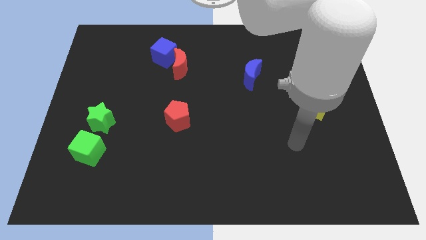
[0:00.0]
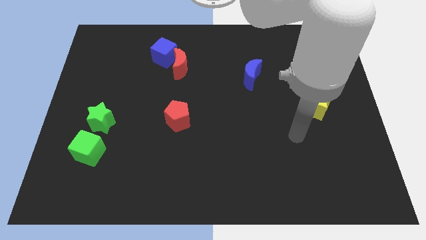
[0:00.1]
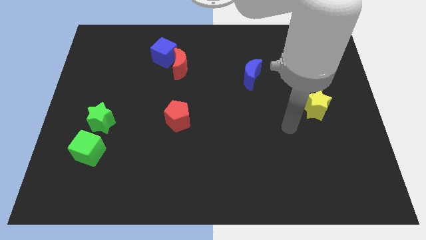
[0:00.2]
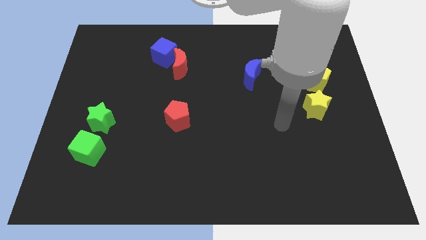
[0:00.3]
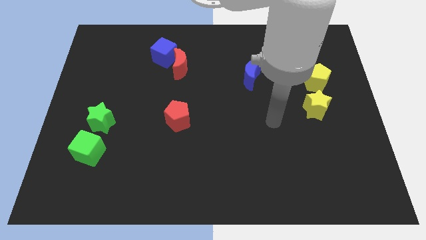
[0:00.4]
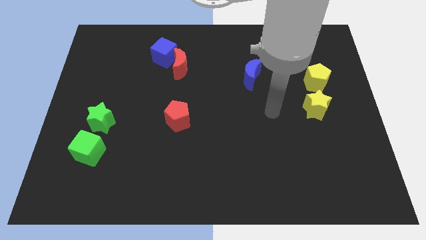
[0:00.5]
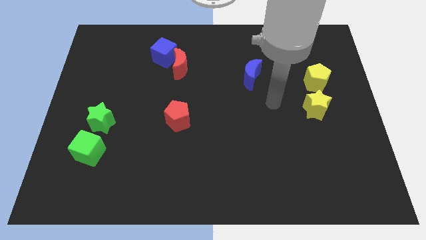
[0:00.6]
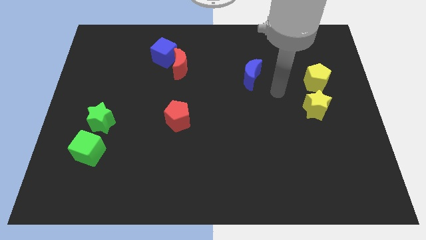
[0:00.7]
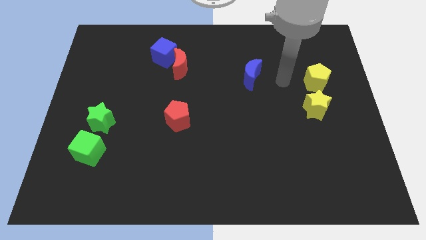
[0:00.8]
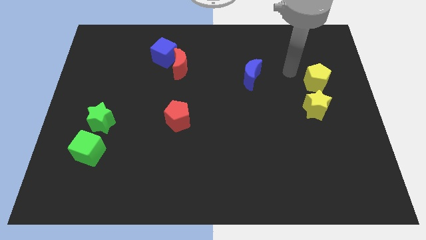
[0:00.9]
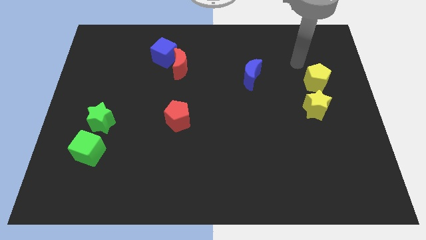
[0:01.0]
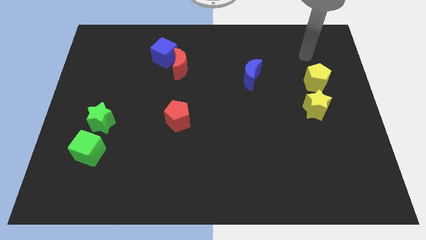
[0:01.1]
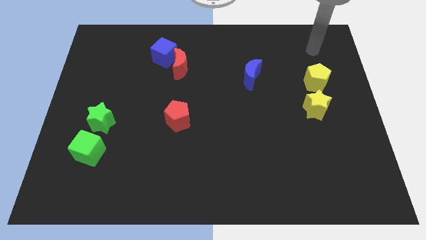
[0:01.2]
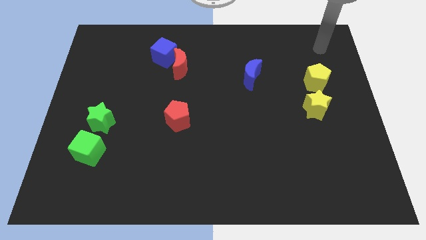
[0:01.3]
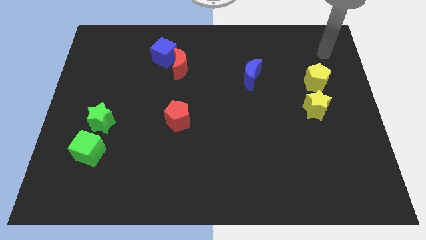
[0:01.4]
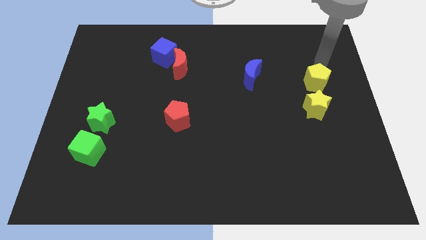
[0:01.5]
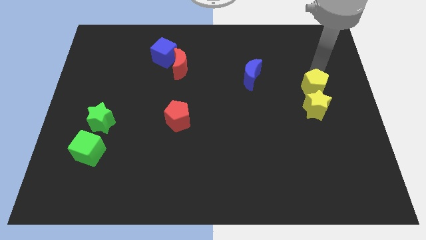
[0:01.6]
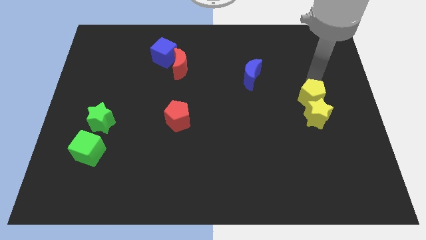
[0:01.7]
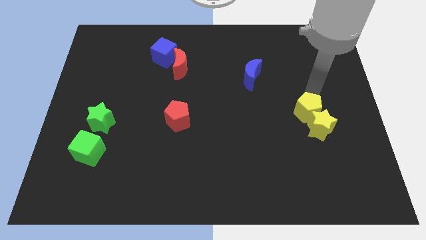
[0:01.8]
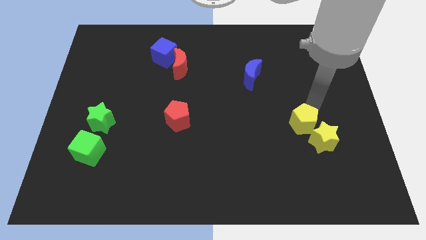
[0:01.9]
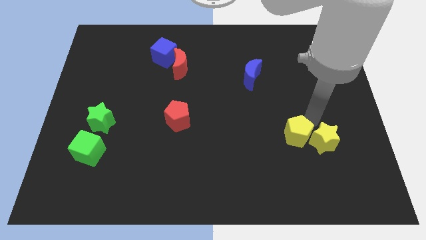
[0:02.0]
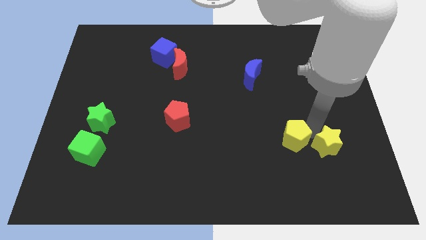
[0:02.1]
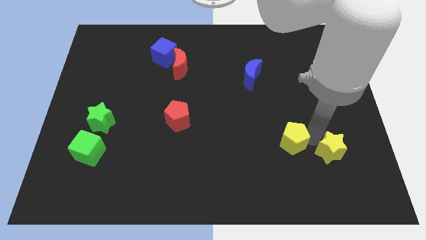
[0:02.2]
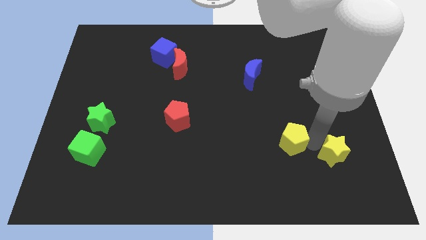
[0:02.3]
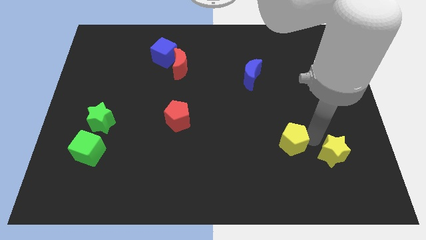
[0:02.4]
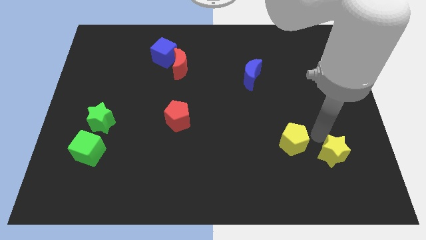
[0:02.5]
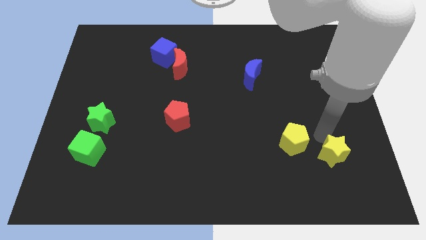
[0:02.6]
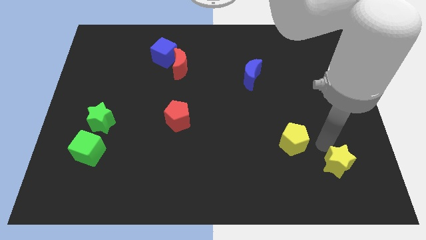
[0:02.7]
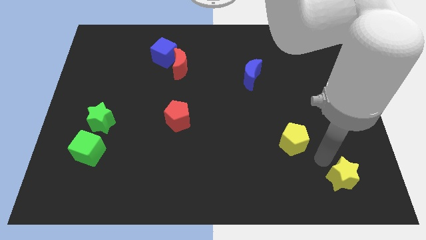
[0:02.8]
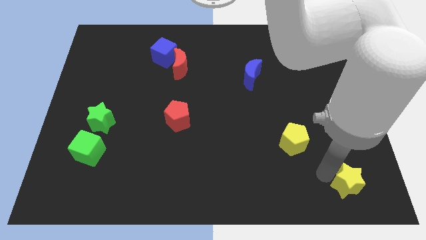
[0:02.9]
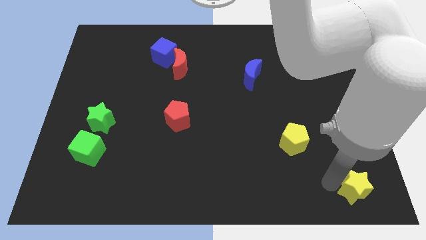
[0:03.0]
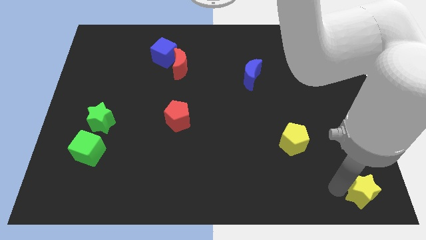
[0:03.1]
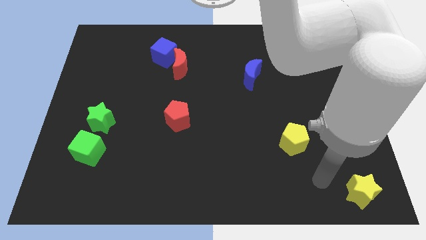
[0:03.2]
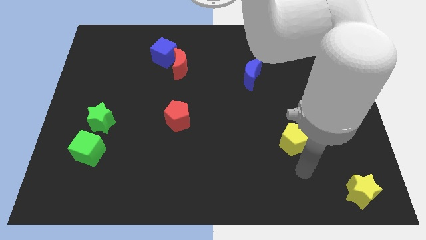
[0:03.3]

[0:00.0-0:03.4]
move the yellow blocks towards the bottom

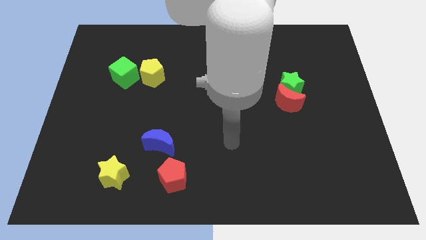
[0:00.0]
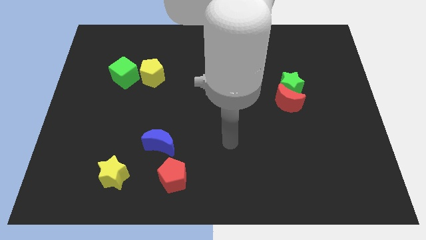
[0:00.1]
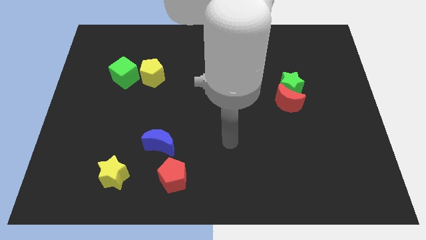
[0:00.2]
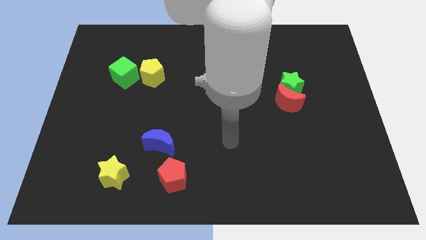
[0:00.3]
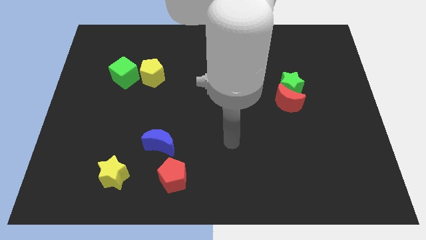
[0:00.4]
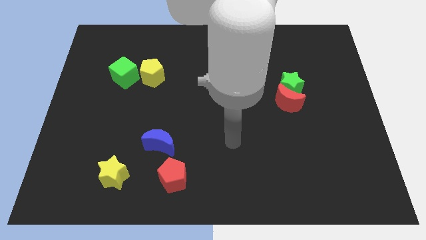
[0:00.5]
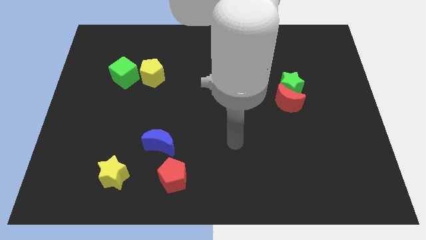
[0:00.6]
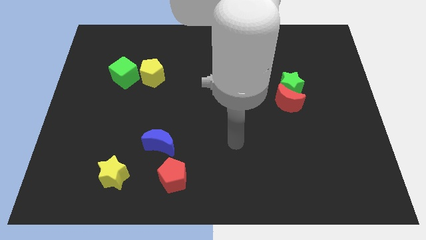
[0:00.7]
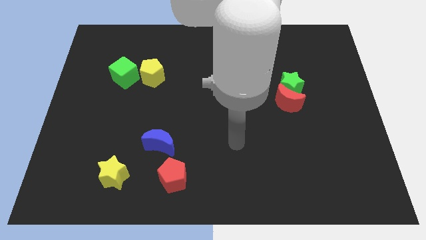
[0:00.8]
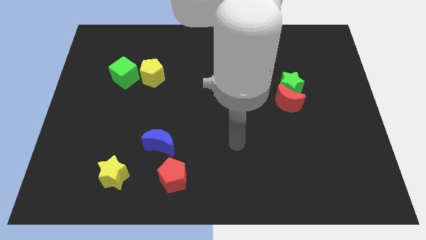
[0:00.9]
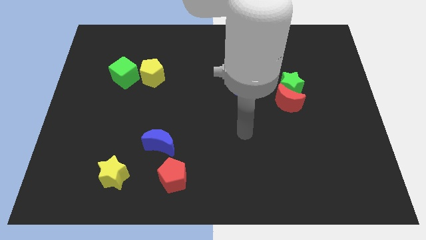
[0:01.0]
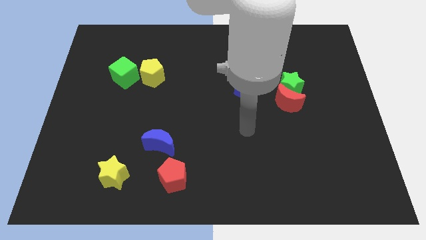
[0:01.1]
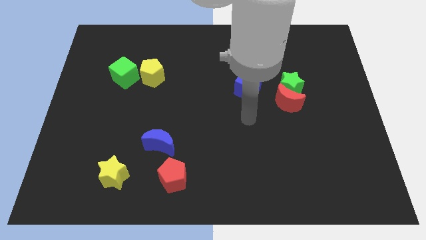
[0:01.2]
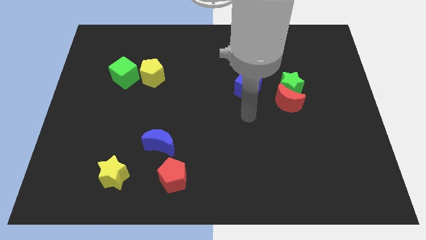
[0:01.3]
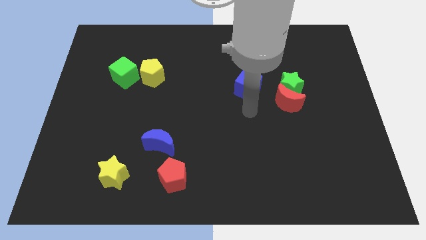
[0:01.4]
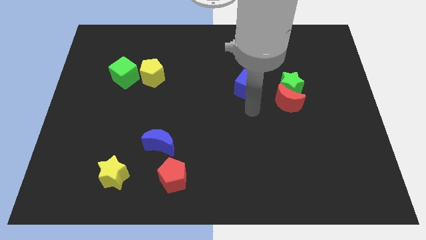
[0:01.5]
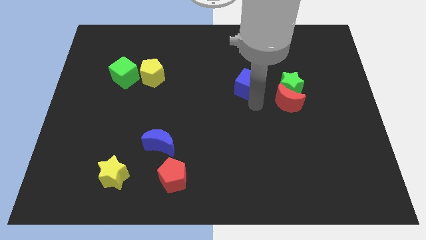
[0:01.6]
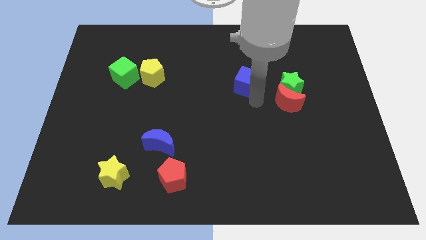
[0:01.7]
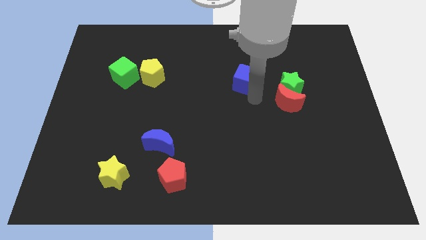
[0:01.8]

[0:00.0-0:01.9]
place your arm below blue cube

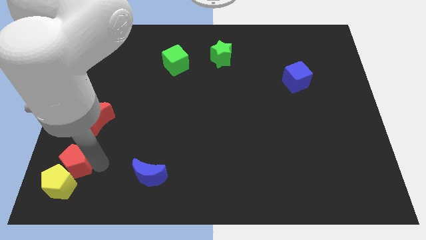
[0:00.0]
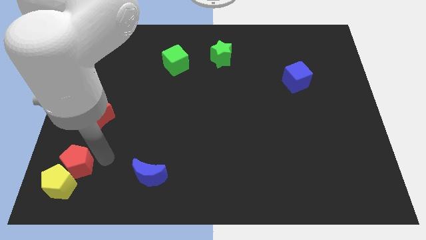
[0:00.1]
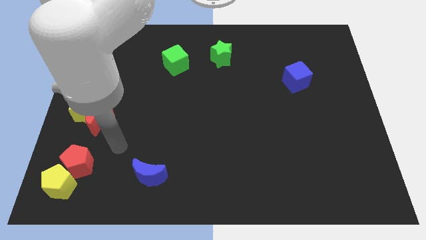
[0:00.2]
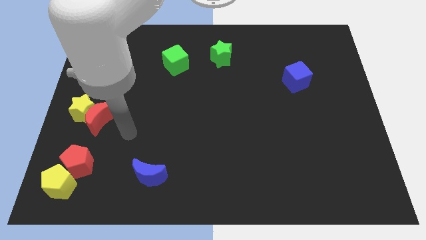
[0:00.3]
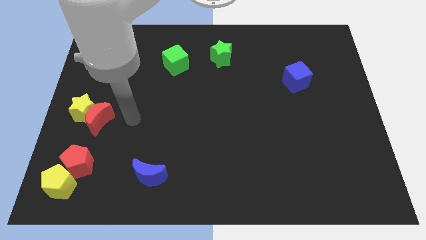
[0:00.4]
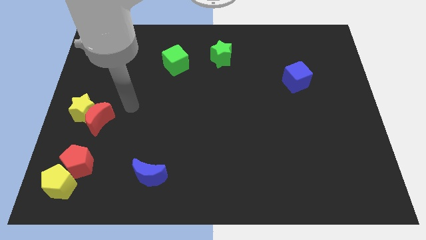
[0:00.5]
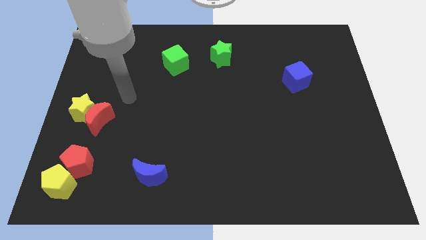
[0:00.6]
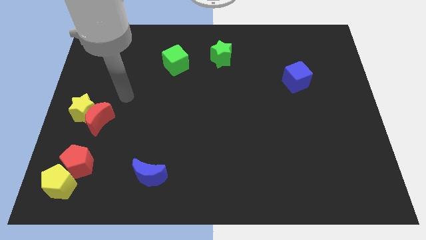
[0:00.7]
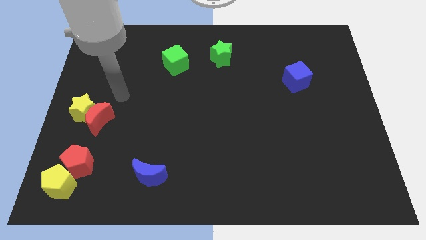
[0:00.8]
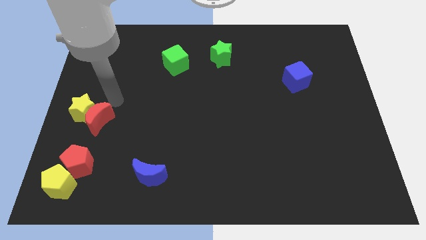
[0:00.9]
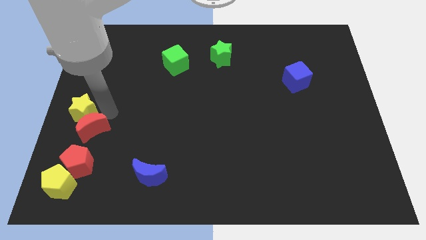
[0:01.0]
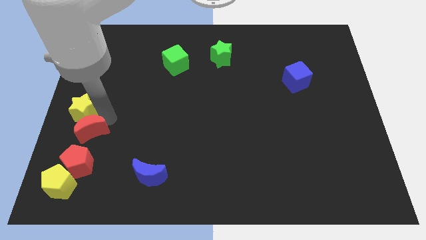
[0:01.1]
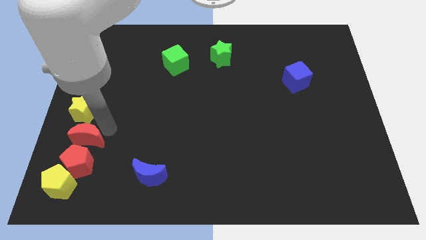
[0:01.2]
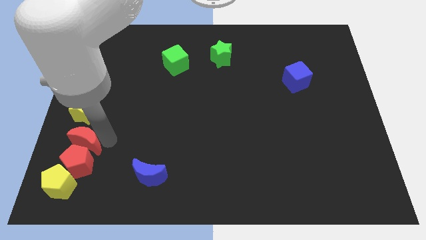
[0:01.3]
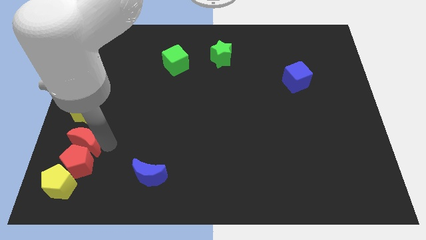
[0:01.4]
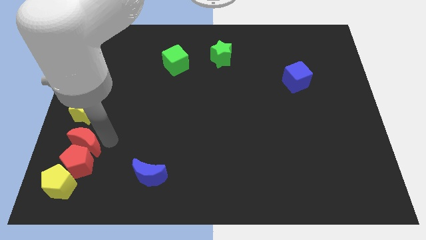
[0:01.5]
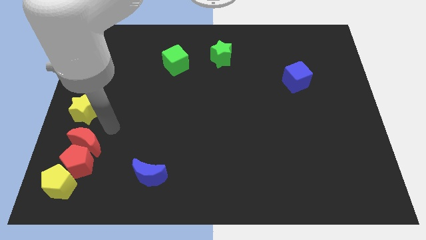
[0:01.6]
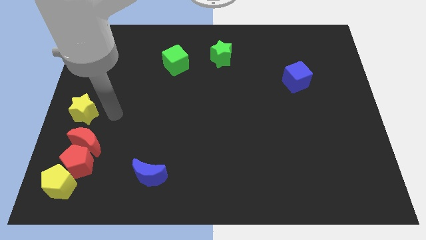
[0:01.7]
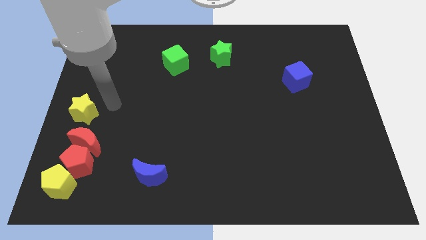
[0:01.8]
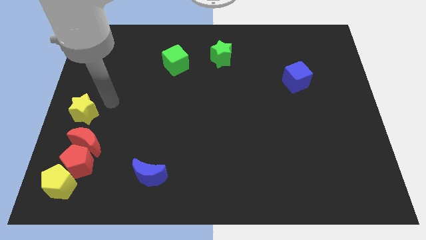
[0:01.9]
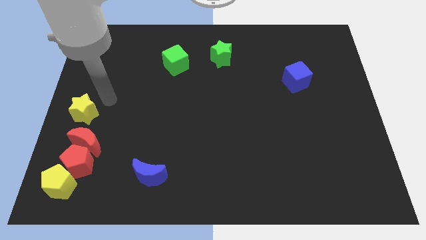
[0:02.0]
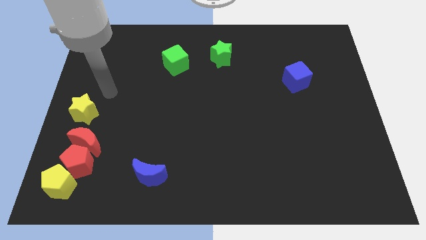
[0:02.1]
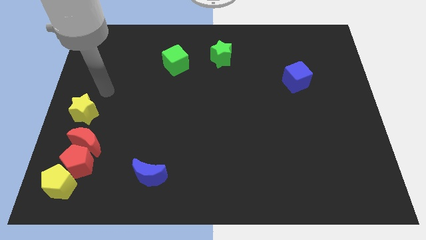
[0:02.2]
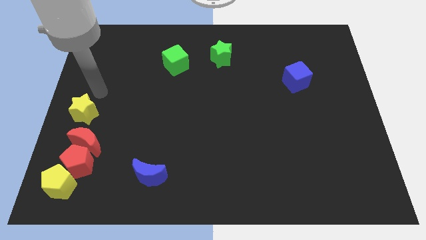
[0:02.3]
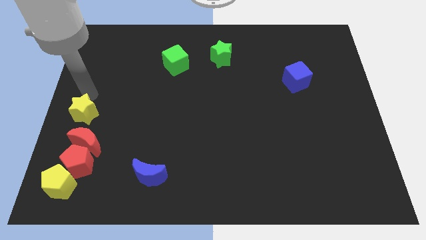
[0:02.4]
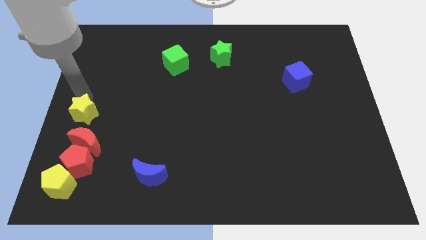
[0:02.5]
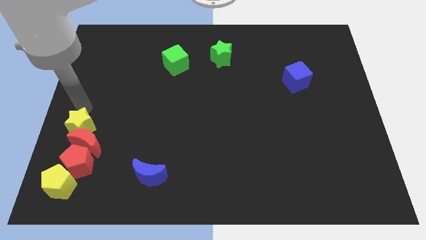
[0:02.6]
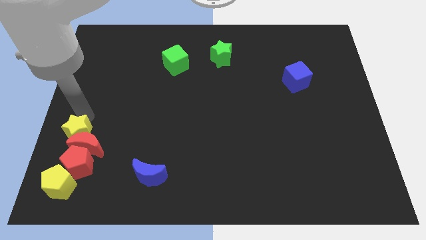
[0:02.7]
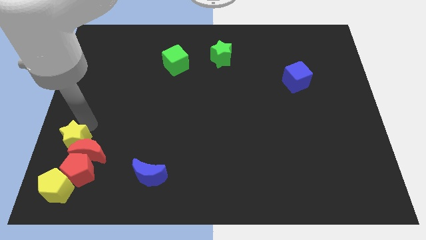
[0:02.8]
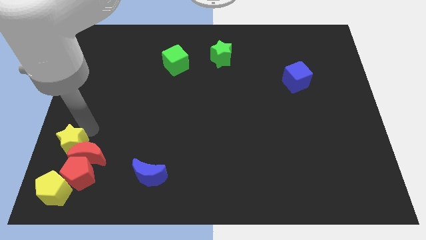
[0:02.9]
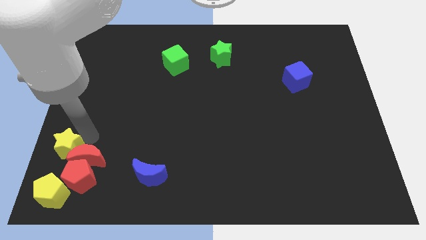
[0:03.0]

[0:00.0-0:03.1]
move yellow star to the top of red moon

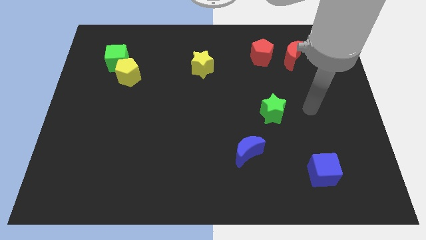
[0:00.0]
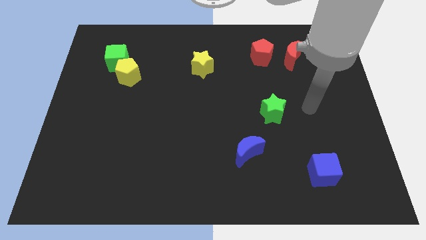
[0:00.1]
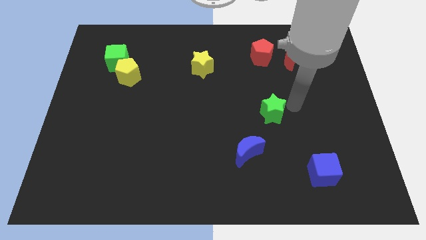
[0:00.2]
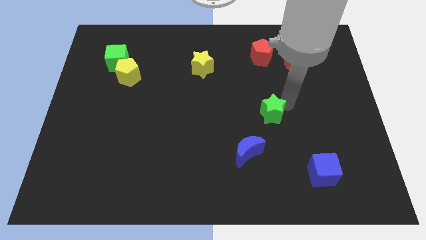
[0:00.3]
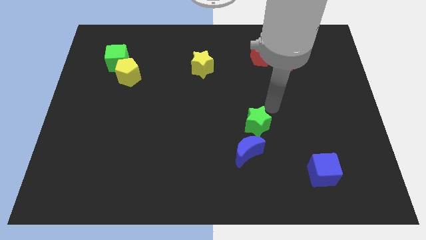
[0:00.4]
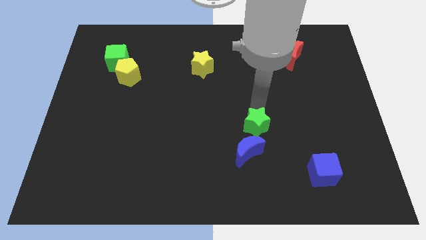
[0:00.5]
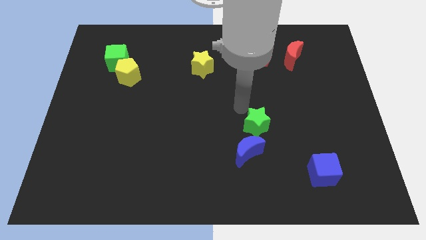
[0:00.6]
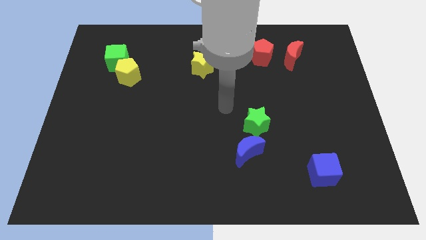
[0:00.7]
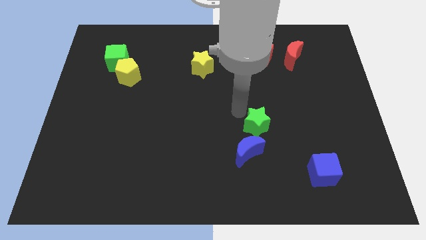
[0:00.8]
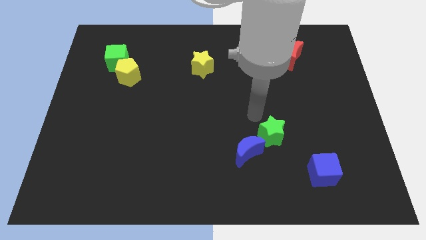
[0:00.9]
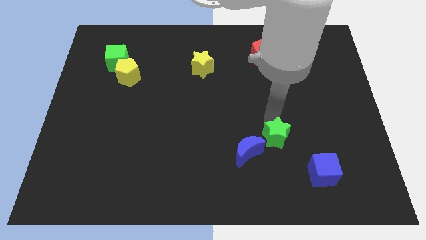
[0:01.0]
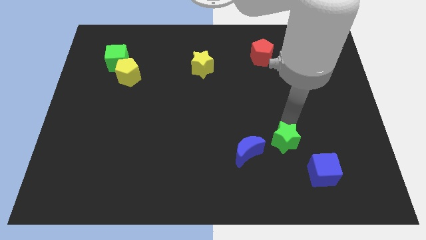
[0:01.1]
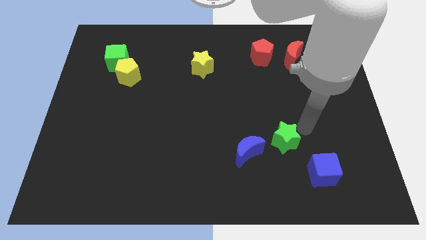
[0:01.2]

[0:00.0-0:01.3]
push the green star to the right of the board
